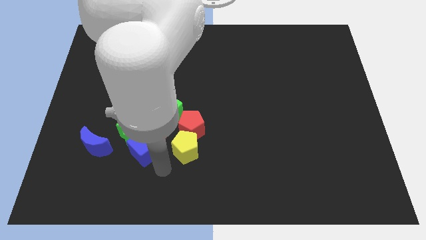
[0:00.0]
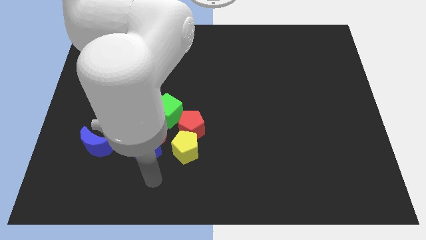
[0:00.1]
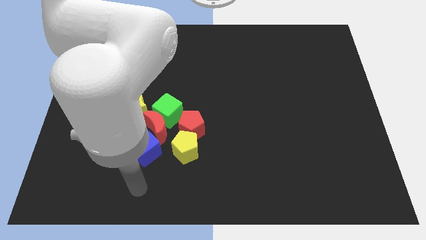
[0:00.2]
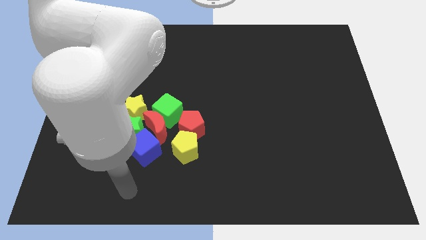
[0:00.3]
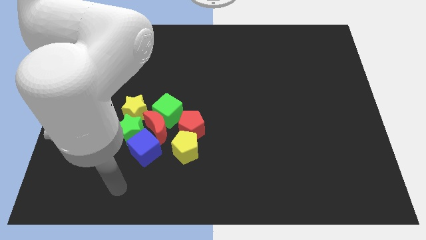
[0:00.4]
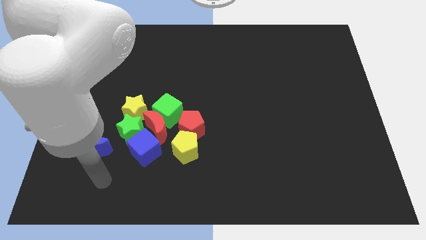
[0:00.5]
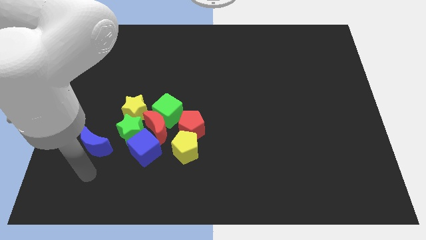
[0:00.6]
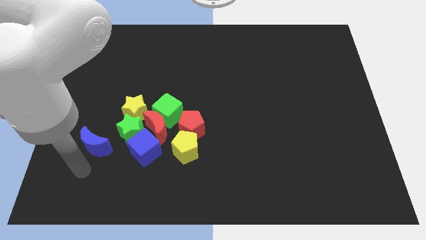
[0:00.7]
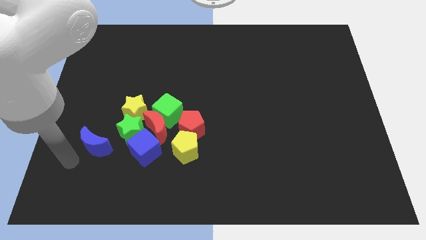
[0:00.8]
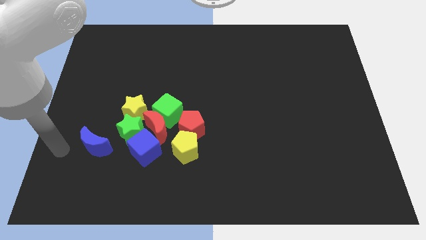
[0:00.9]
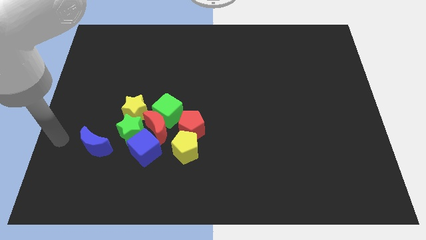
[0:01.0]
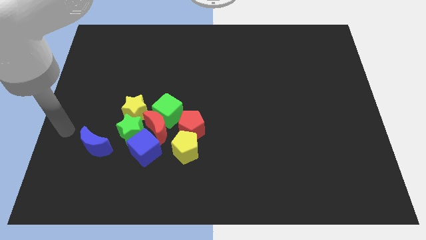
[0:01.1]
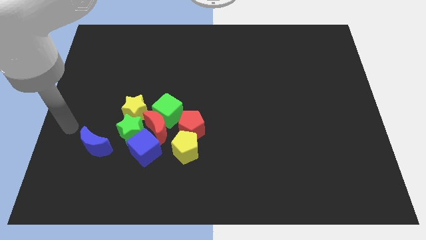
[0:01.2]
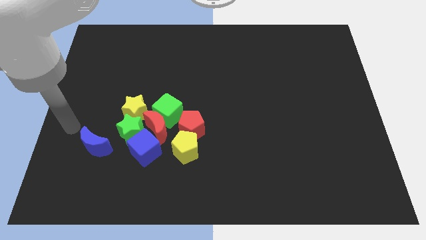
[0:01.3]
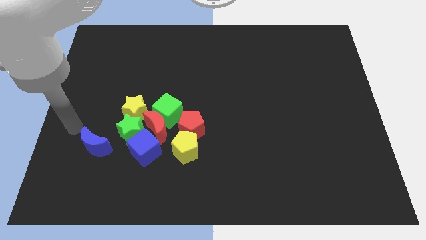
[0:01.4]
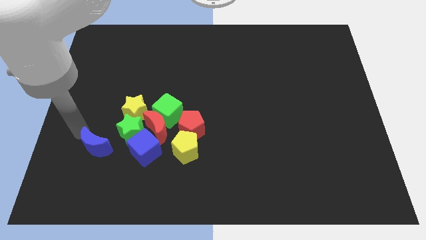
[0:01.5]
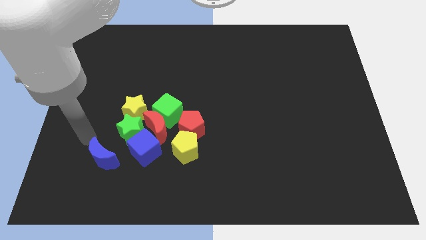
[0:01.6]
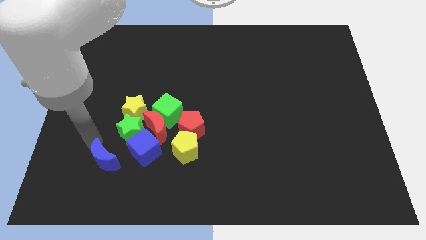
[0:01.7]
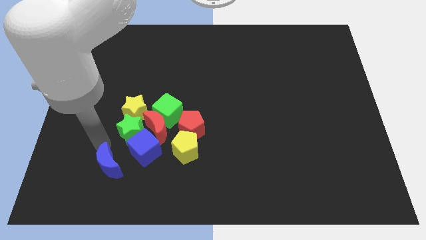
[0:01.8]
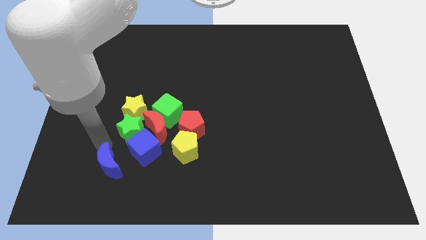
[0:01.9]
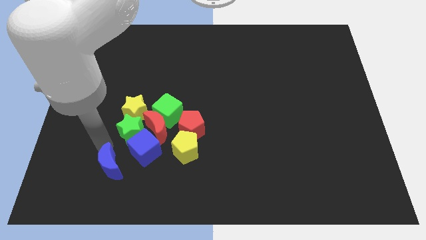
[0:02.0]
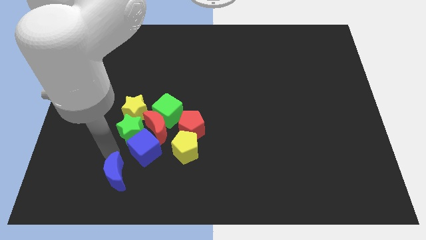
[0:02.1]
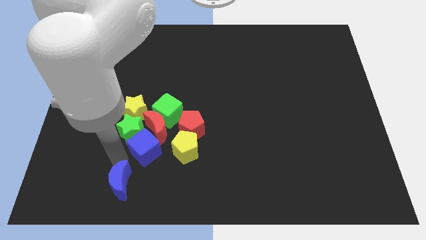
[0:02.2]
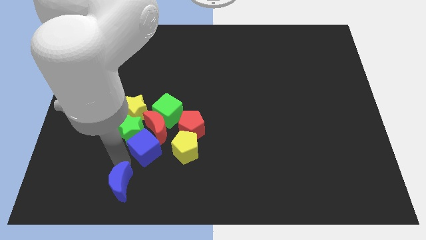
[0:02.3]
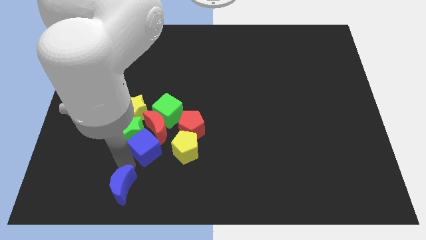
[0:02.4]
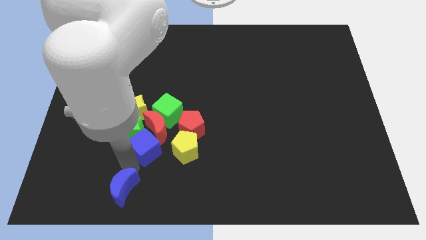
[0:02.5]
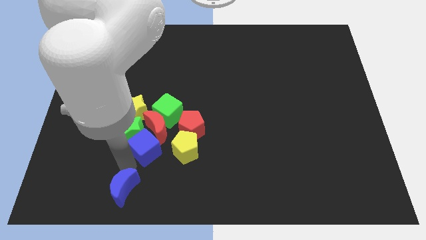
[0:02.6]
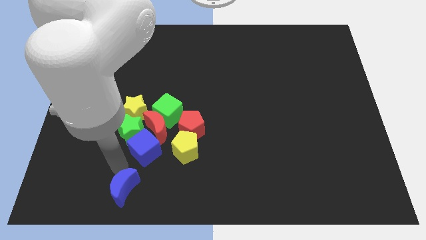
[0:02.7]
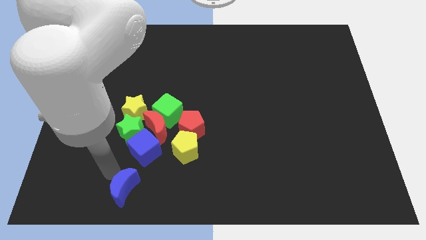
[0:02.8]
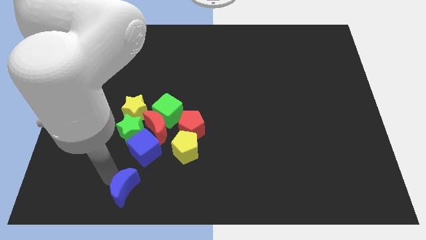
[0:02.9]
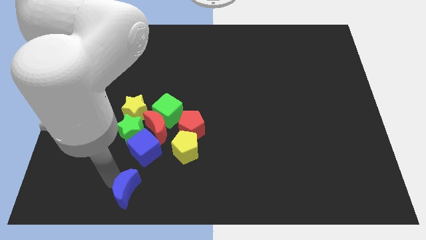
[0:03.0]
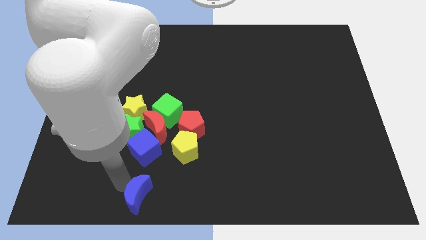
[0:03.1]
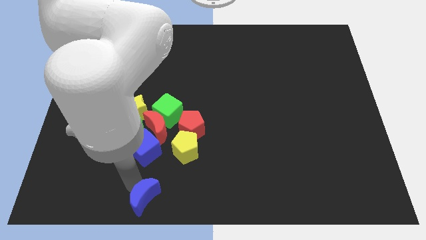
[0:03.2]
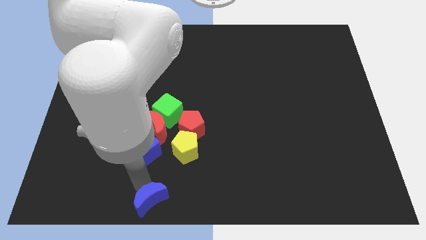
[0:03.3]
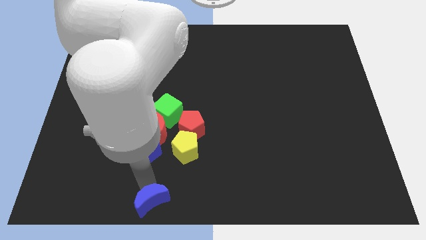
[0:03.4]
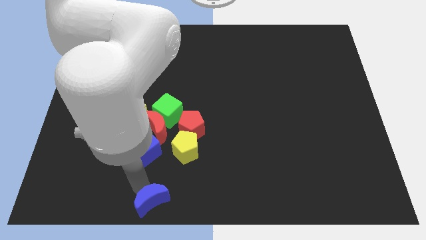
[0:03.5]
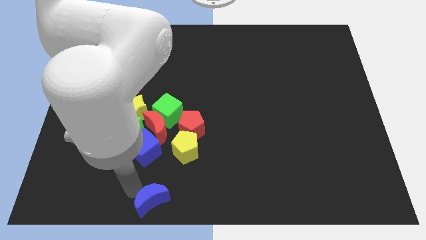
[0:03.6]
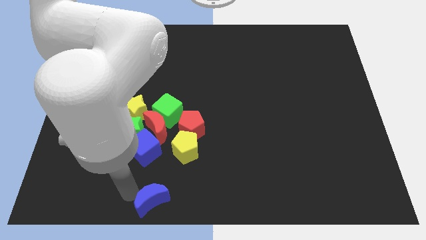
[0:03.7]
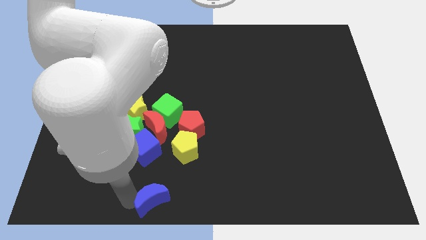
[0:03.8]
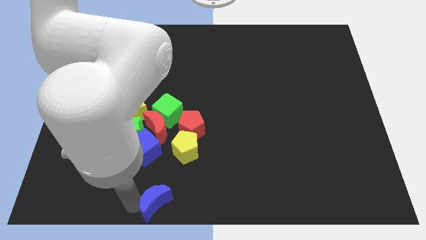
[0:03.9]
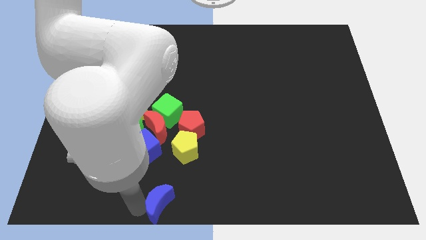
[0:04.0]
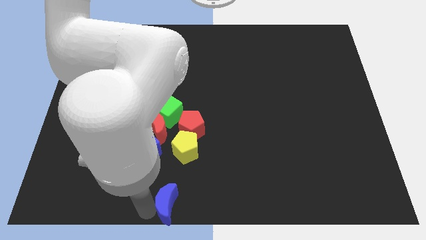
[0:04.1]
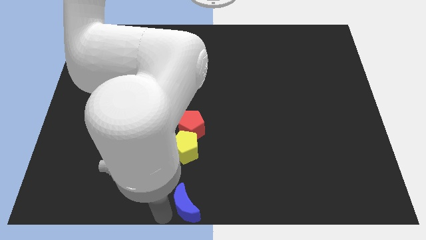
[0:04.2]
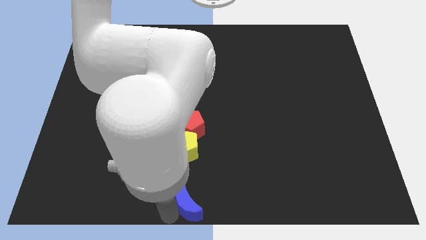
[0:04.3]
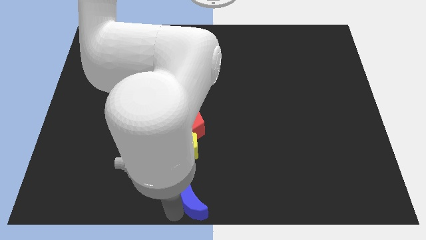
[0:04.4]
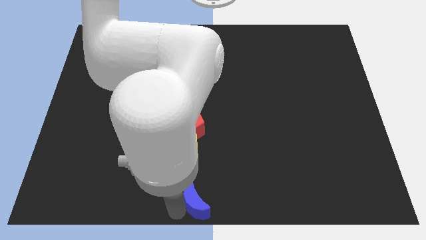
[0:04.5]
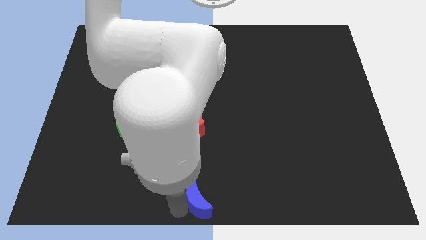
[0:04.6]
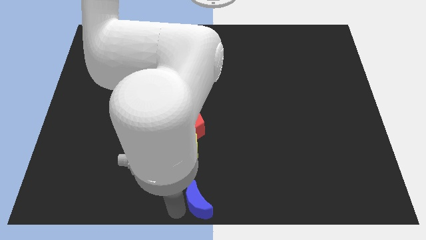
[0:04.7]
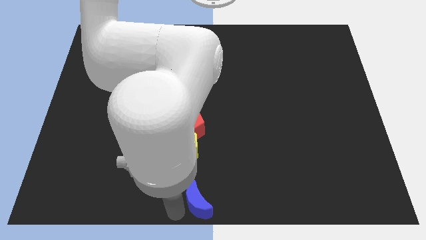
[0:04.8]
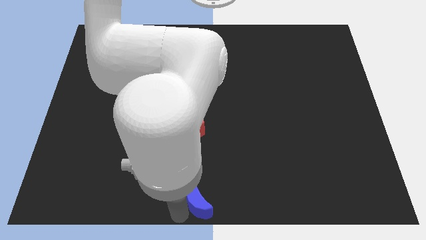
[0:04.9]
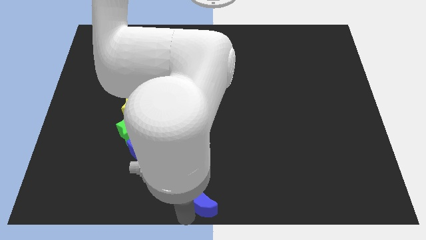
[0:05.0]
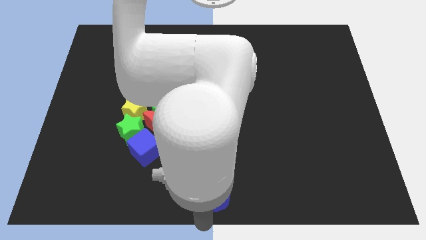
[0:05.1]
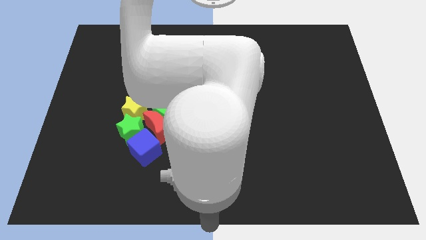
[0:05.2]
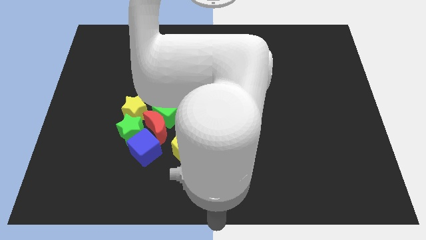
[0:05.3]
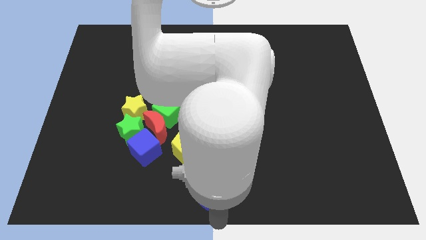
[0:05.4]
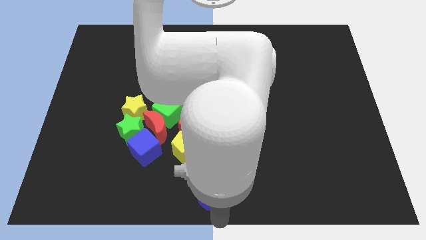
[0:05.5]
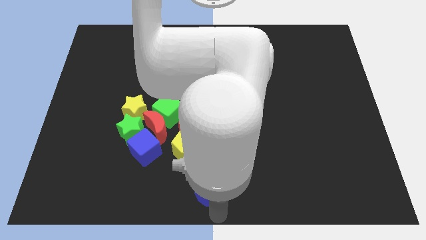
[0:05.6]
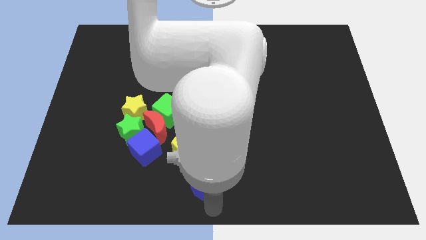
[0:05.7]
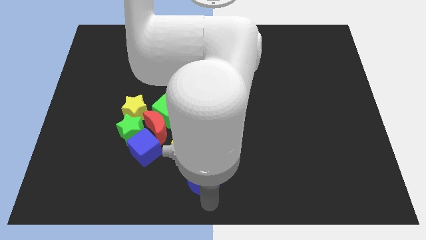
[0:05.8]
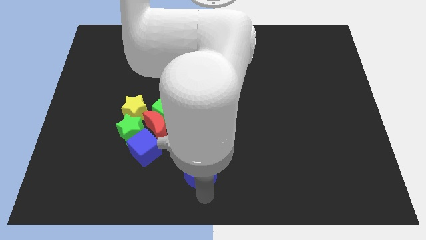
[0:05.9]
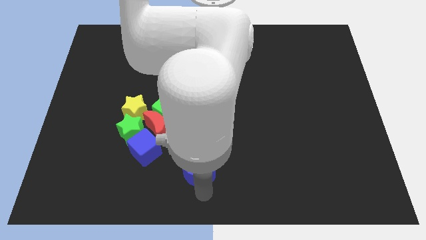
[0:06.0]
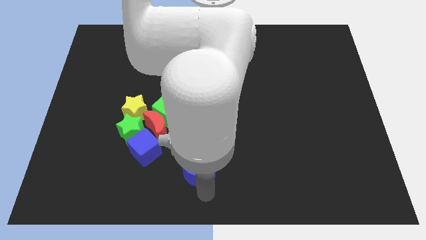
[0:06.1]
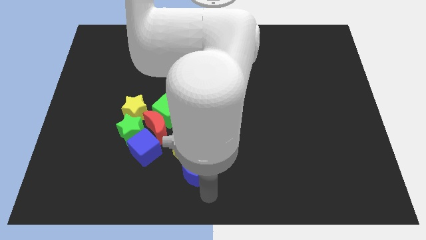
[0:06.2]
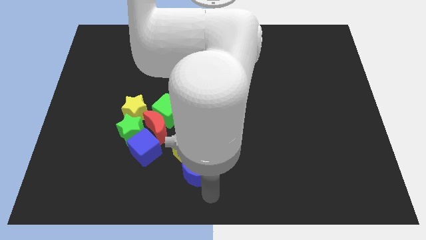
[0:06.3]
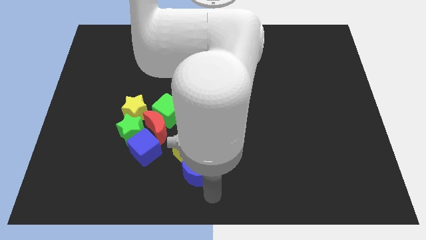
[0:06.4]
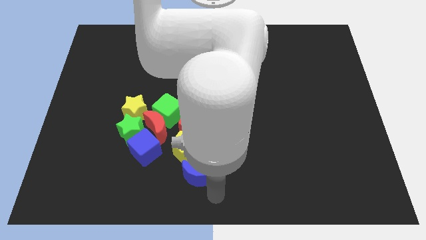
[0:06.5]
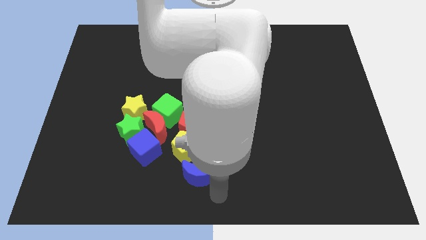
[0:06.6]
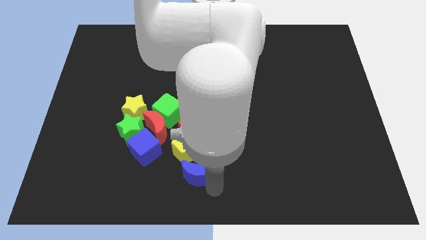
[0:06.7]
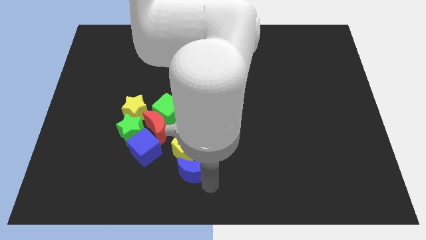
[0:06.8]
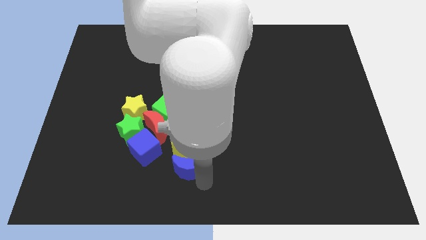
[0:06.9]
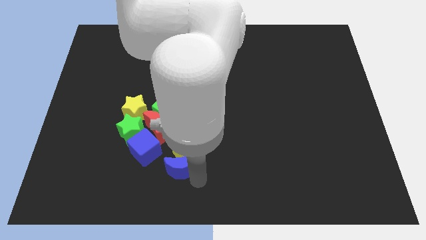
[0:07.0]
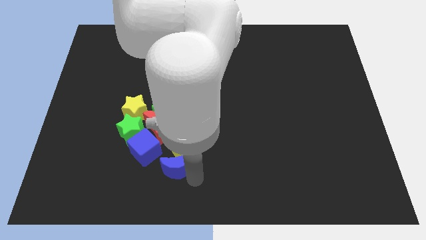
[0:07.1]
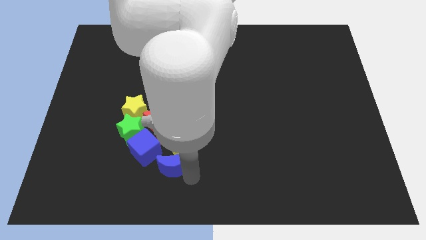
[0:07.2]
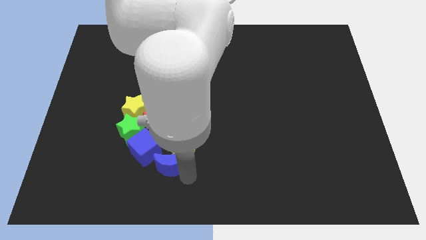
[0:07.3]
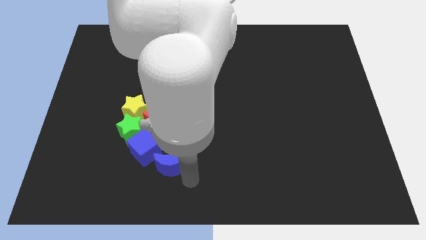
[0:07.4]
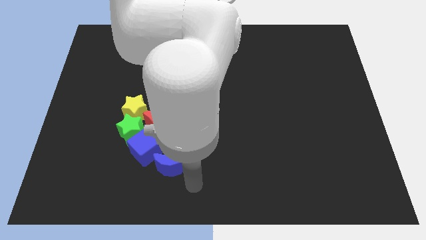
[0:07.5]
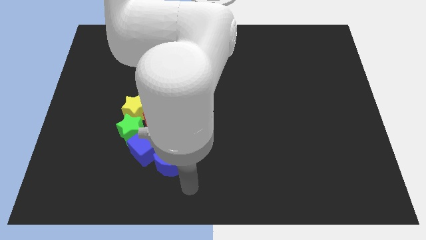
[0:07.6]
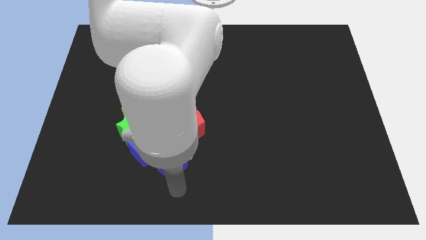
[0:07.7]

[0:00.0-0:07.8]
move the blue moon close to the yellow penatgon

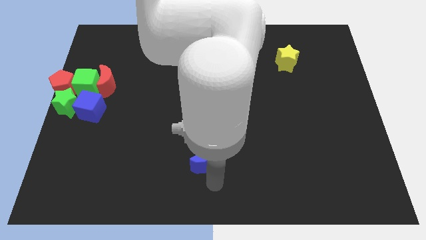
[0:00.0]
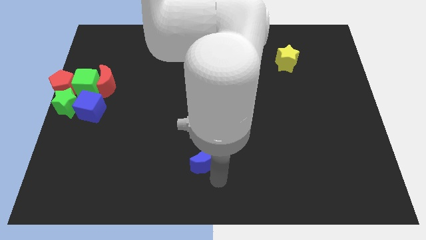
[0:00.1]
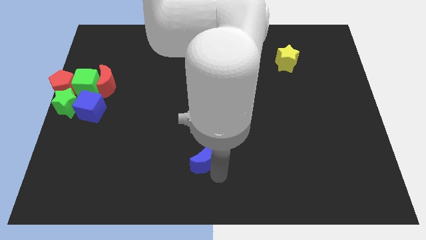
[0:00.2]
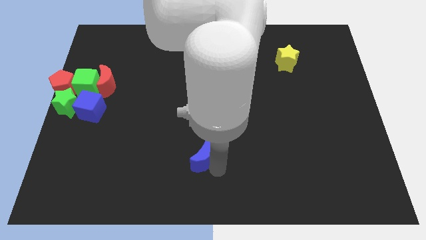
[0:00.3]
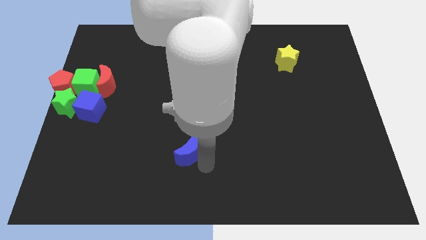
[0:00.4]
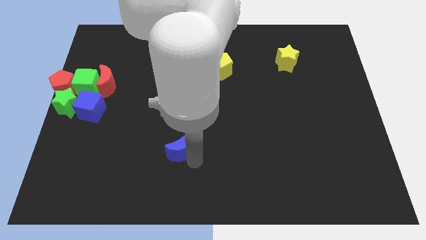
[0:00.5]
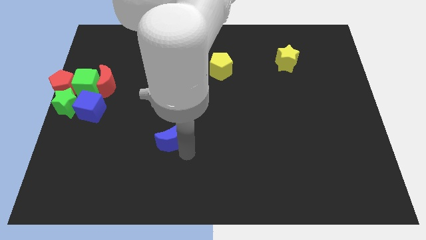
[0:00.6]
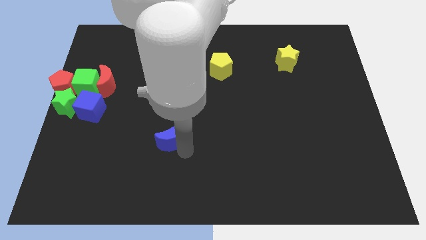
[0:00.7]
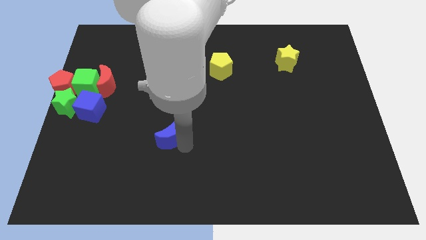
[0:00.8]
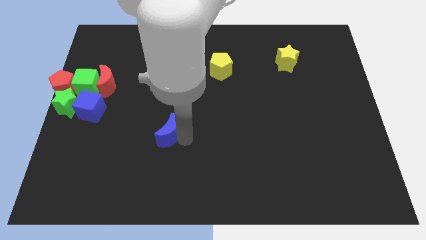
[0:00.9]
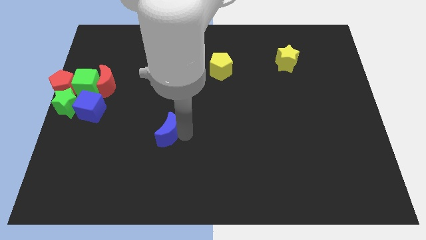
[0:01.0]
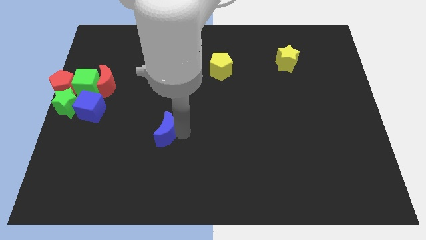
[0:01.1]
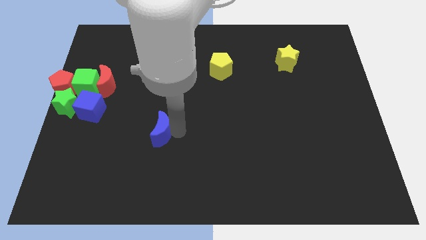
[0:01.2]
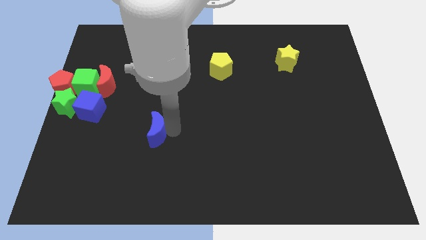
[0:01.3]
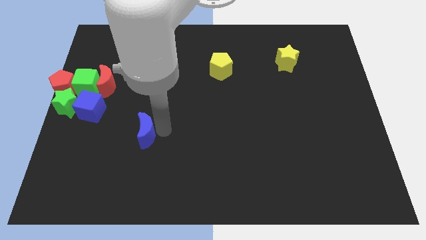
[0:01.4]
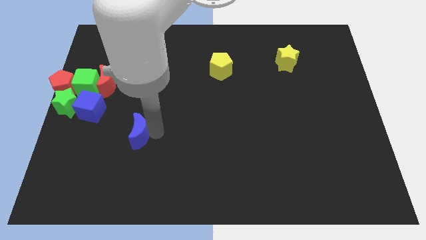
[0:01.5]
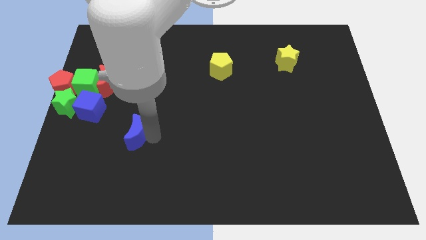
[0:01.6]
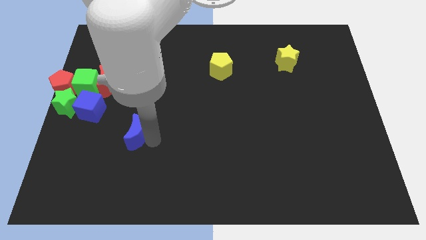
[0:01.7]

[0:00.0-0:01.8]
move the blue moon towards the group of blocks
